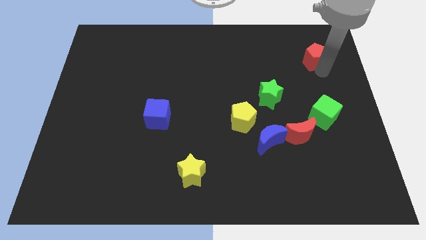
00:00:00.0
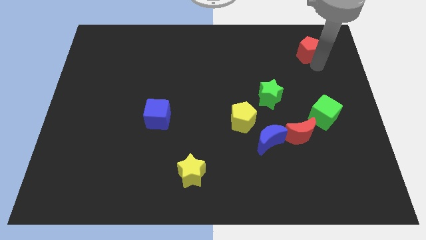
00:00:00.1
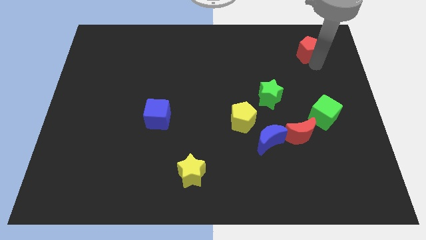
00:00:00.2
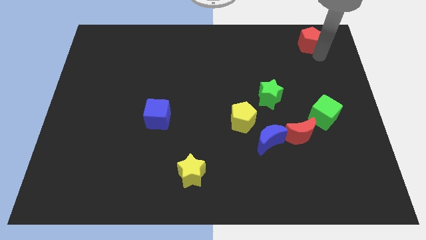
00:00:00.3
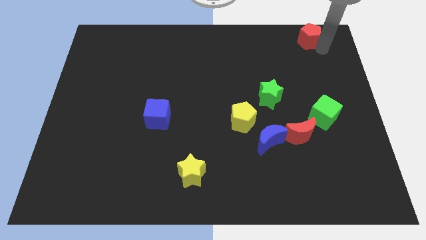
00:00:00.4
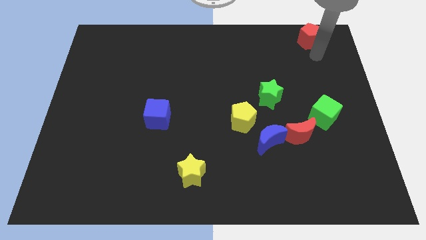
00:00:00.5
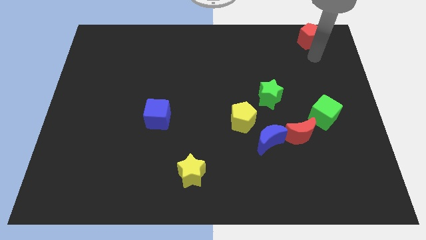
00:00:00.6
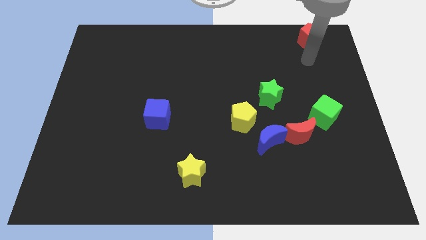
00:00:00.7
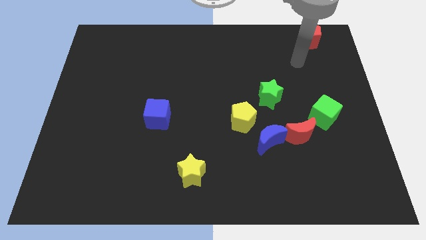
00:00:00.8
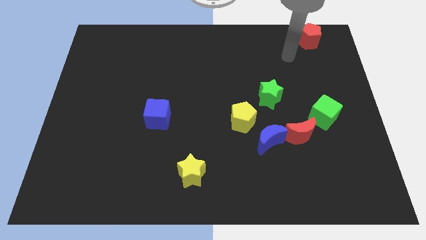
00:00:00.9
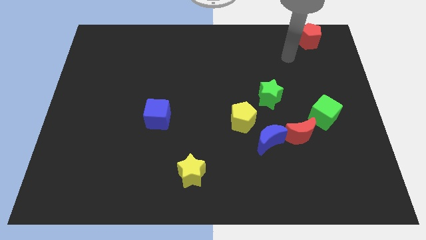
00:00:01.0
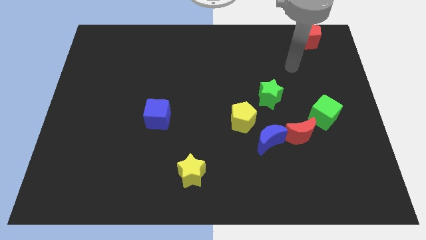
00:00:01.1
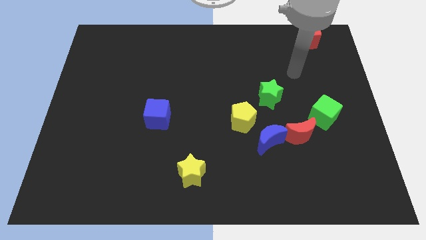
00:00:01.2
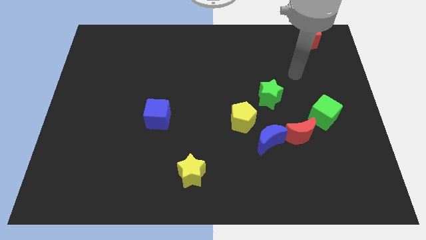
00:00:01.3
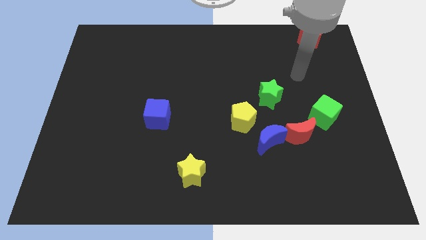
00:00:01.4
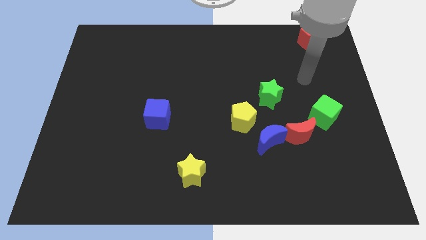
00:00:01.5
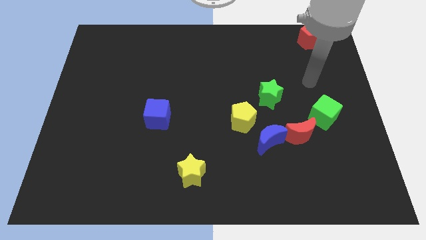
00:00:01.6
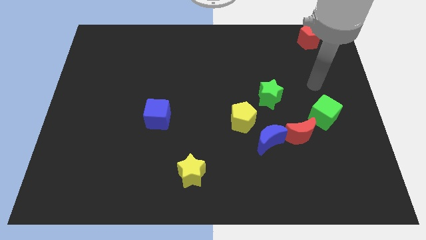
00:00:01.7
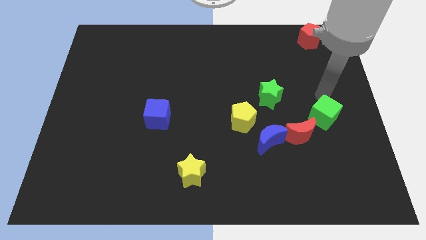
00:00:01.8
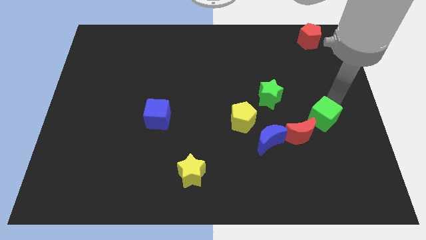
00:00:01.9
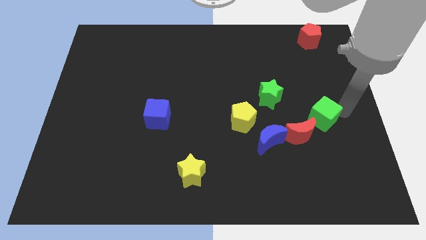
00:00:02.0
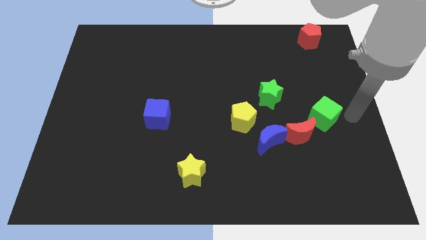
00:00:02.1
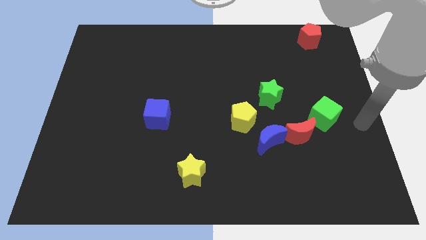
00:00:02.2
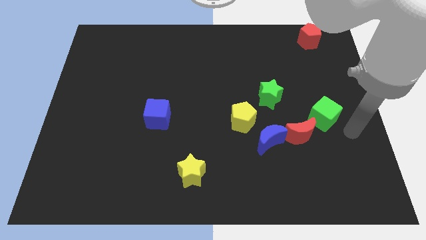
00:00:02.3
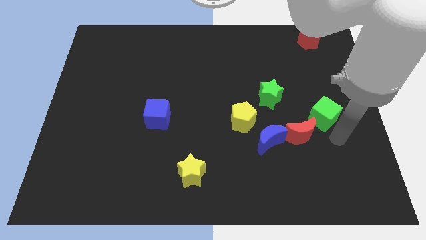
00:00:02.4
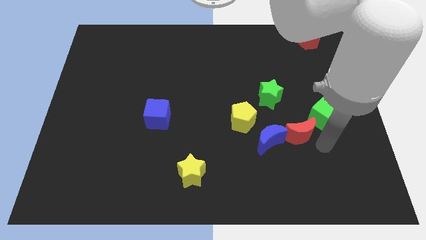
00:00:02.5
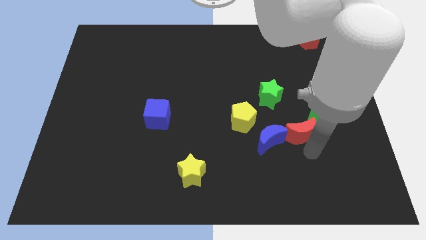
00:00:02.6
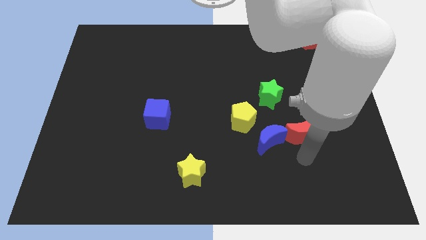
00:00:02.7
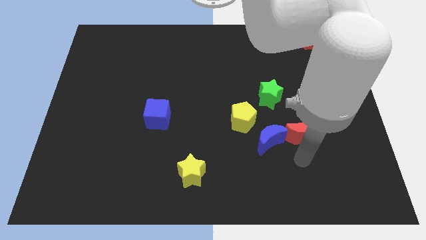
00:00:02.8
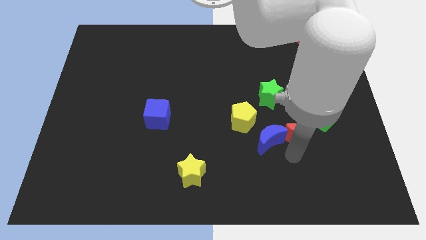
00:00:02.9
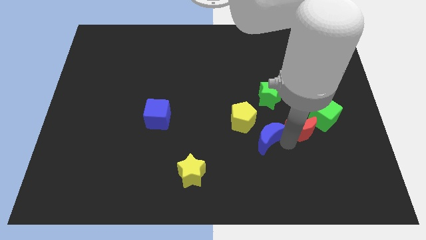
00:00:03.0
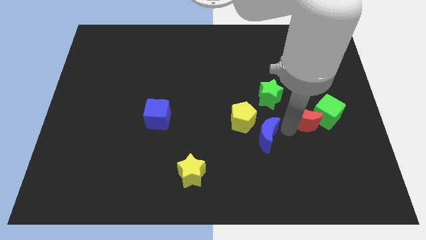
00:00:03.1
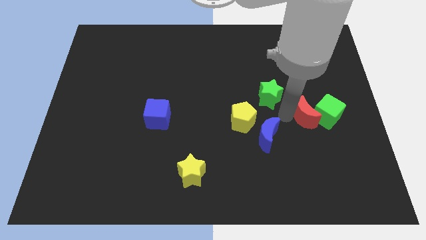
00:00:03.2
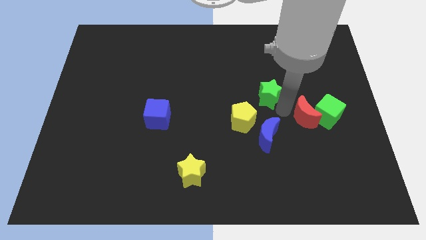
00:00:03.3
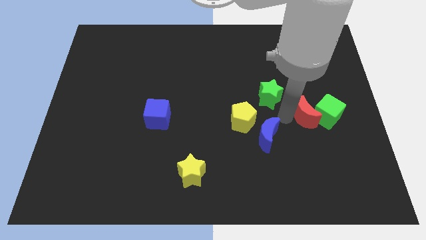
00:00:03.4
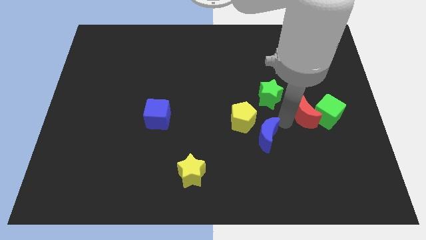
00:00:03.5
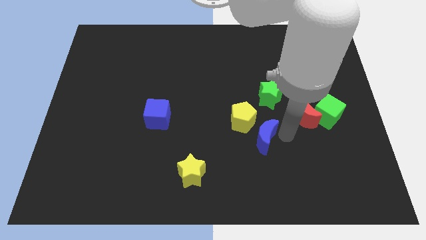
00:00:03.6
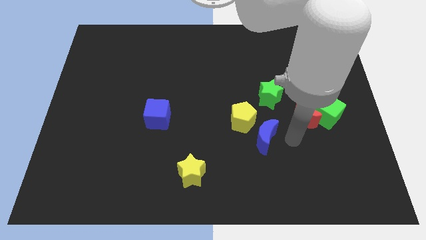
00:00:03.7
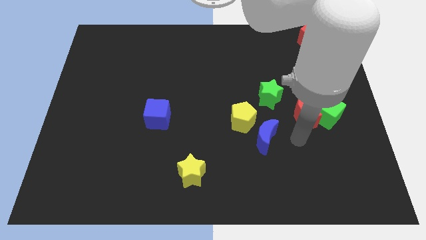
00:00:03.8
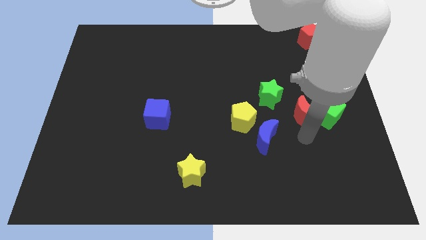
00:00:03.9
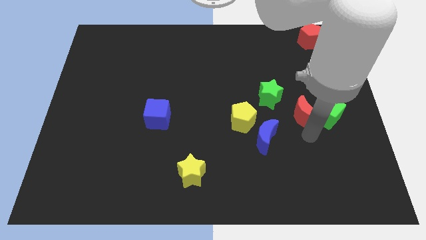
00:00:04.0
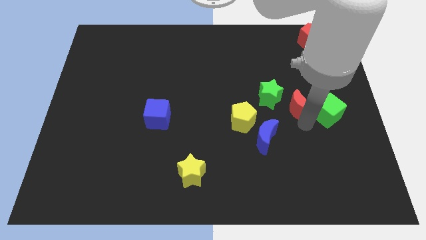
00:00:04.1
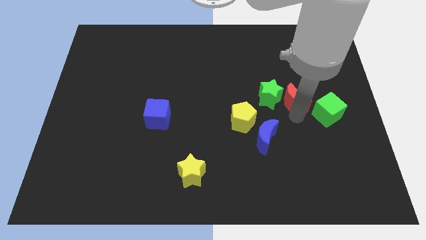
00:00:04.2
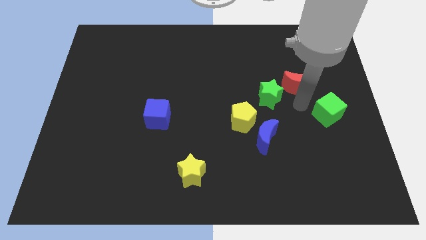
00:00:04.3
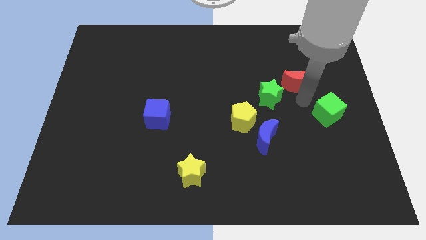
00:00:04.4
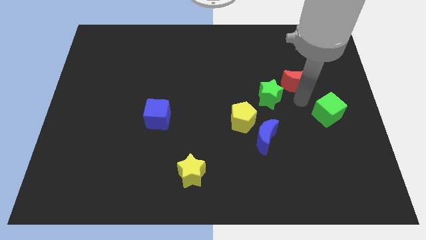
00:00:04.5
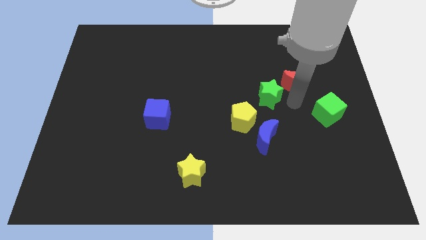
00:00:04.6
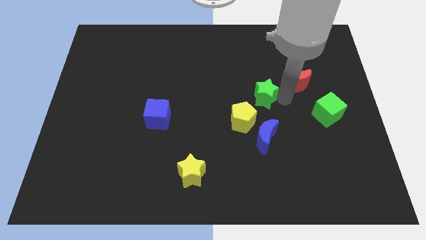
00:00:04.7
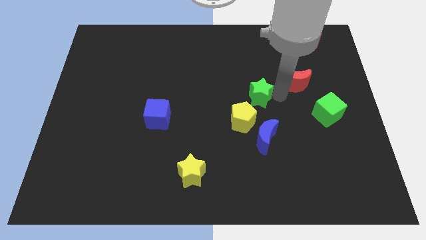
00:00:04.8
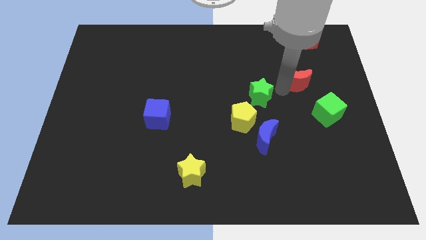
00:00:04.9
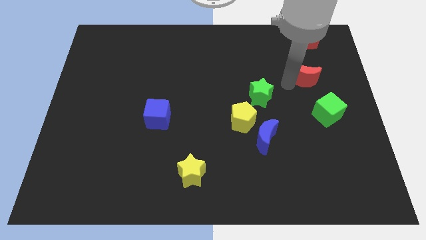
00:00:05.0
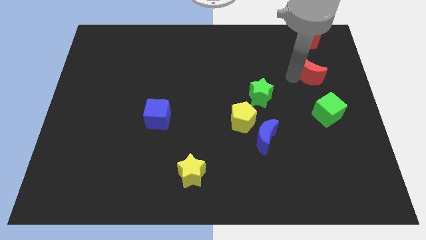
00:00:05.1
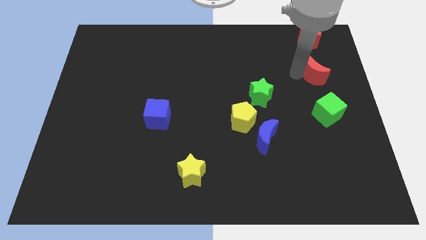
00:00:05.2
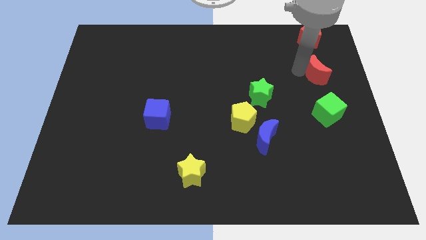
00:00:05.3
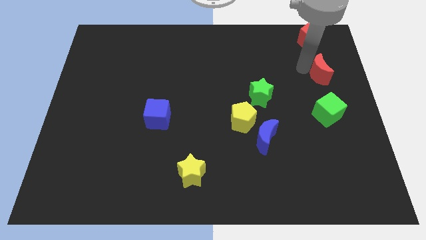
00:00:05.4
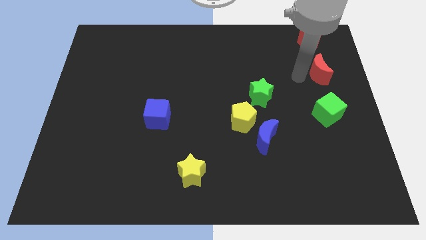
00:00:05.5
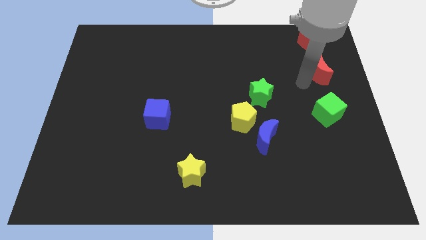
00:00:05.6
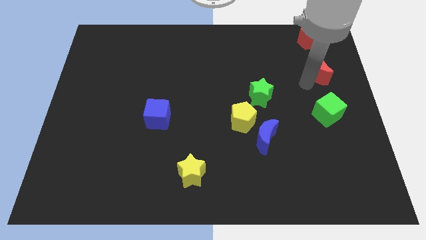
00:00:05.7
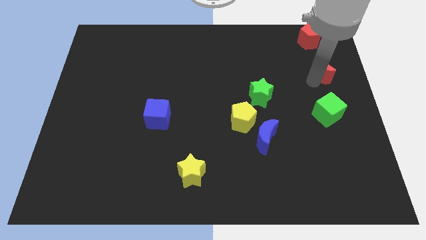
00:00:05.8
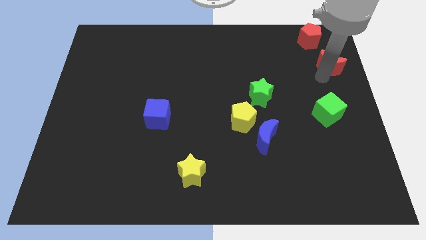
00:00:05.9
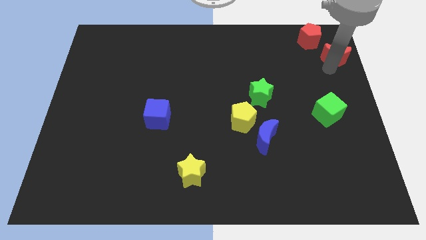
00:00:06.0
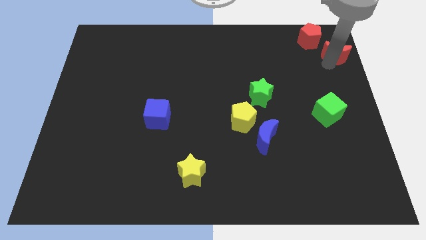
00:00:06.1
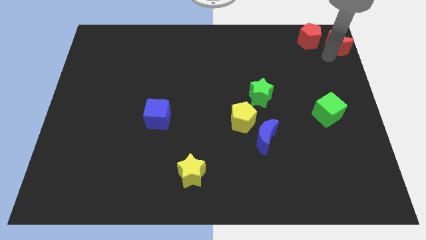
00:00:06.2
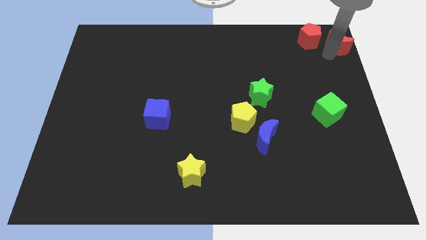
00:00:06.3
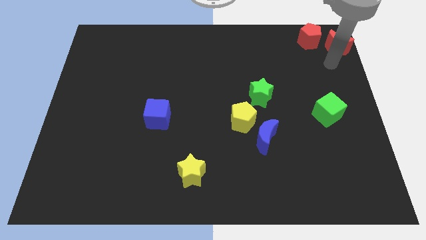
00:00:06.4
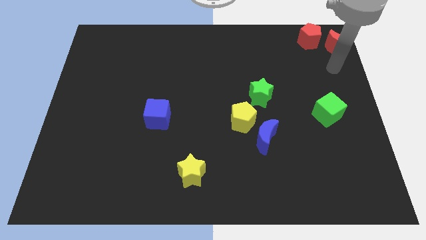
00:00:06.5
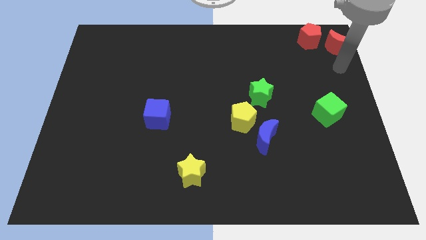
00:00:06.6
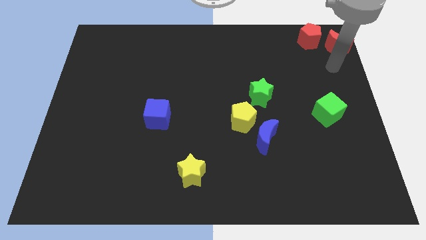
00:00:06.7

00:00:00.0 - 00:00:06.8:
move the red moon to the top right corner of the board

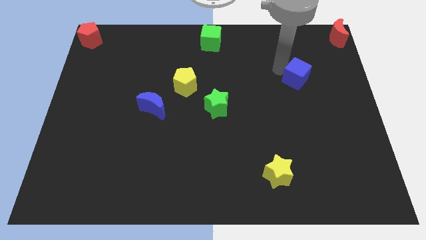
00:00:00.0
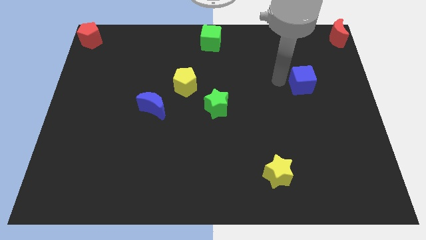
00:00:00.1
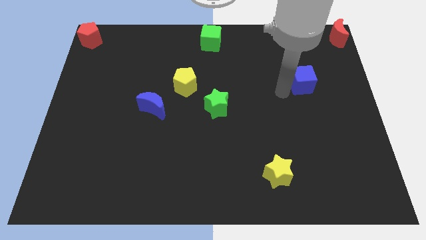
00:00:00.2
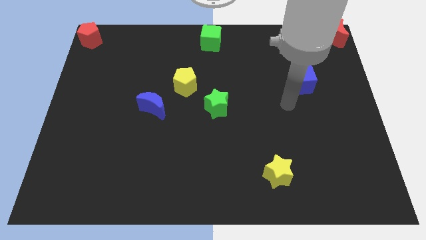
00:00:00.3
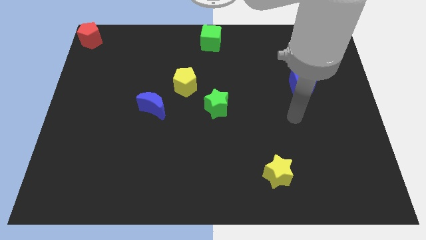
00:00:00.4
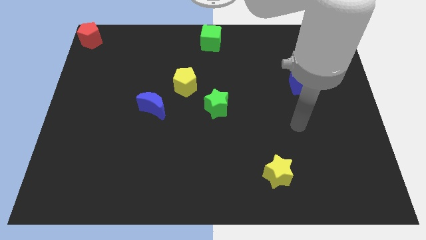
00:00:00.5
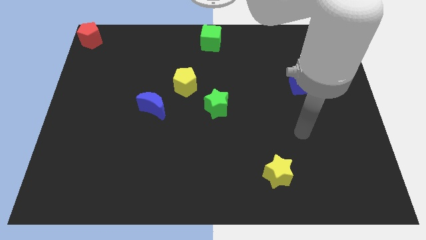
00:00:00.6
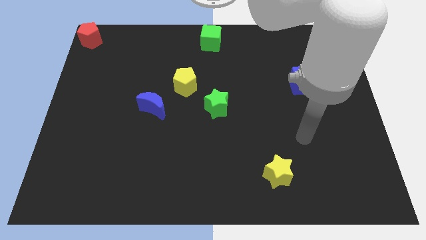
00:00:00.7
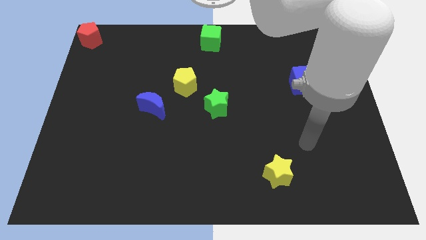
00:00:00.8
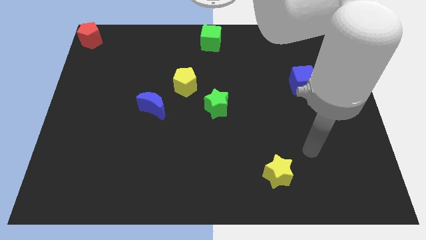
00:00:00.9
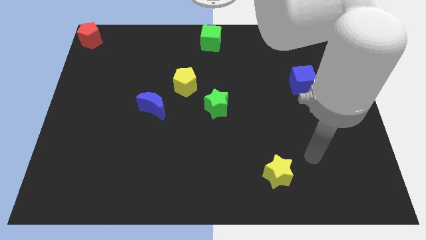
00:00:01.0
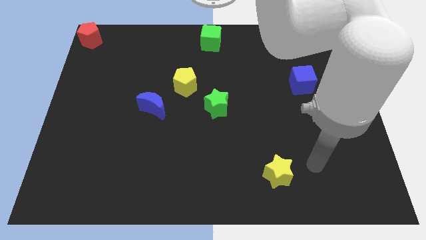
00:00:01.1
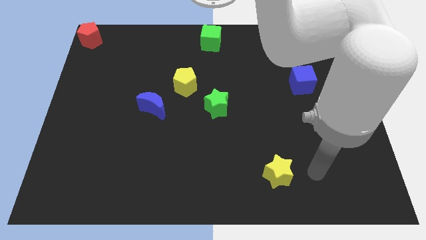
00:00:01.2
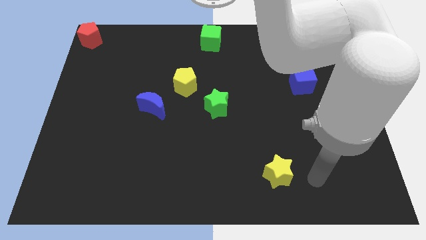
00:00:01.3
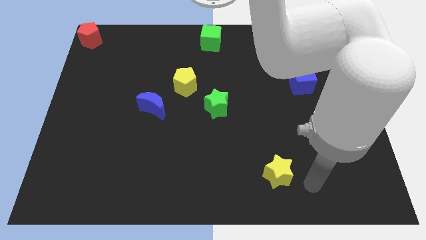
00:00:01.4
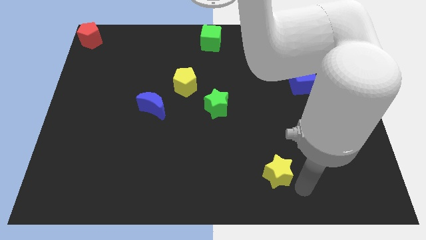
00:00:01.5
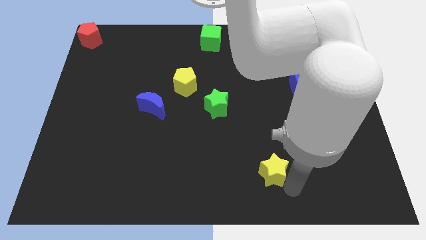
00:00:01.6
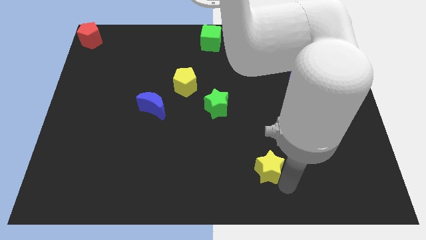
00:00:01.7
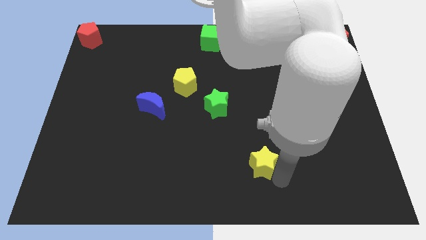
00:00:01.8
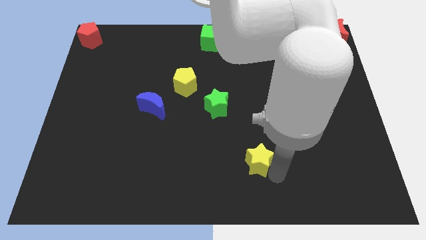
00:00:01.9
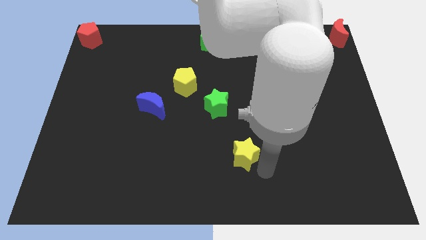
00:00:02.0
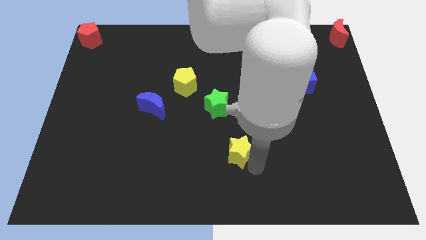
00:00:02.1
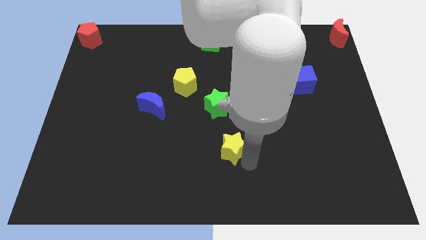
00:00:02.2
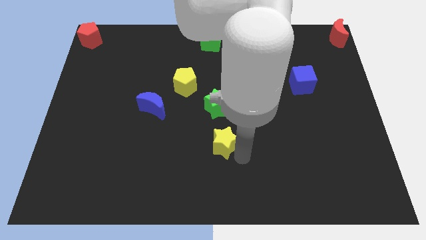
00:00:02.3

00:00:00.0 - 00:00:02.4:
push the yellow star to the bottom side of the green star
